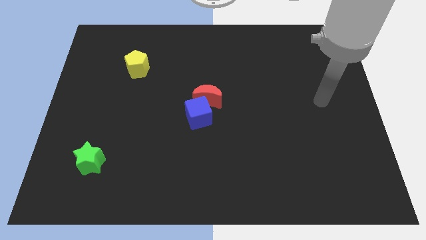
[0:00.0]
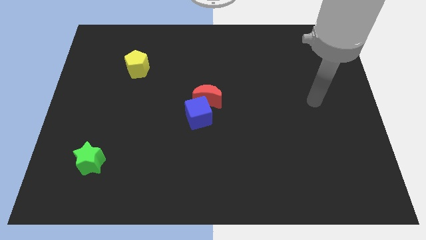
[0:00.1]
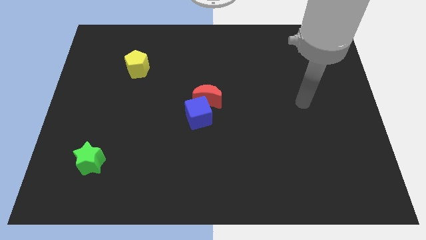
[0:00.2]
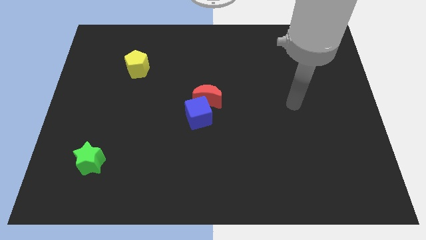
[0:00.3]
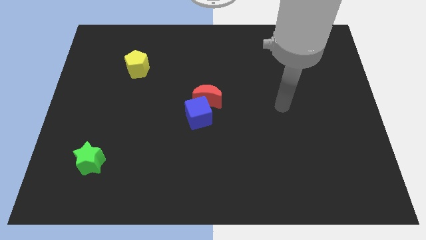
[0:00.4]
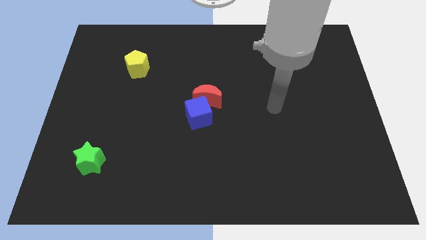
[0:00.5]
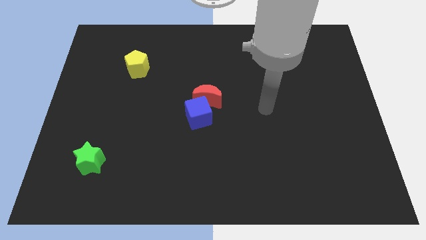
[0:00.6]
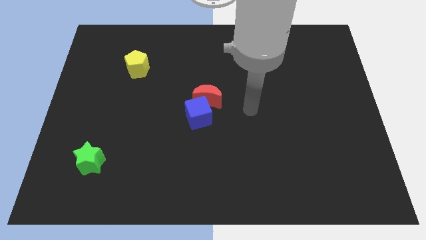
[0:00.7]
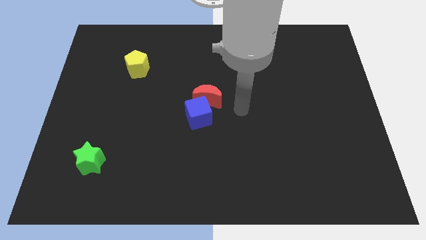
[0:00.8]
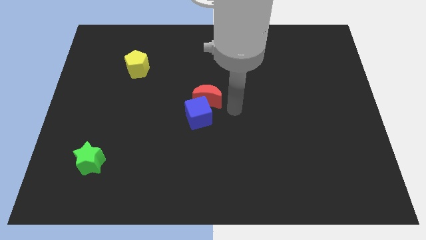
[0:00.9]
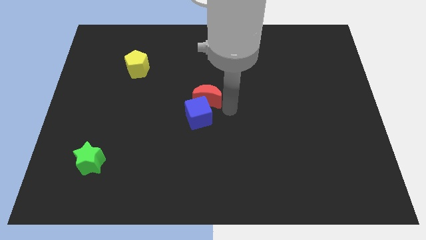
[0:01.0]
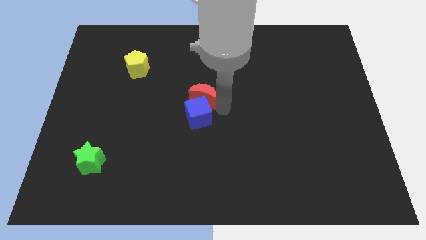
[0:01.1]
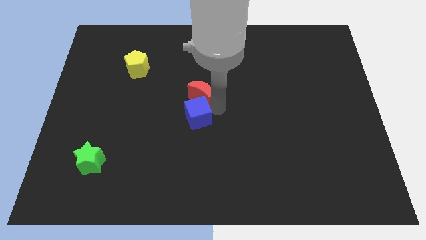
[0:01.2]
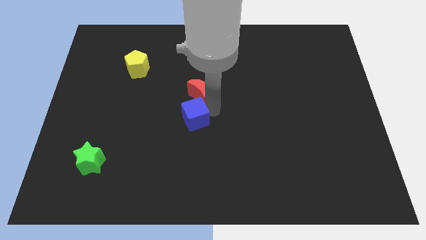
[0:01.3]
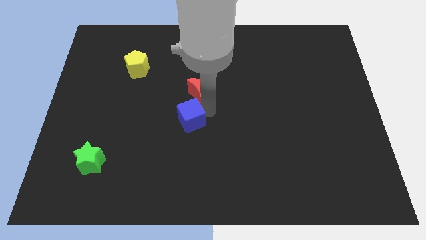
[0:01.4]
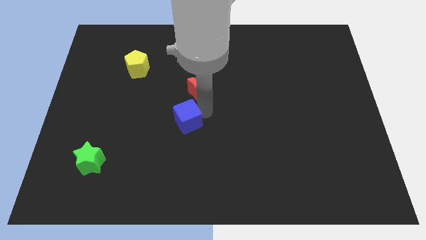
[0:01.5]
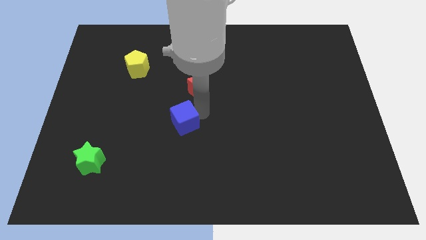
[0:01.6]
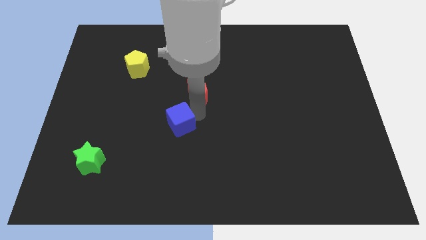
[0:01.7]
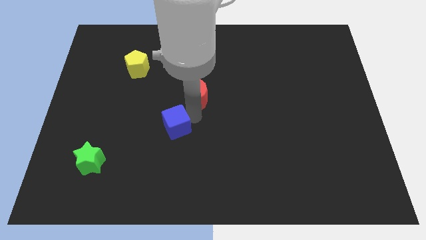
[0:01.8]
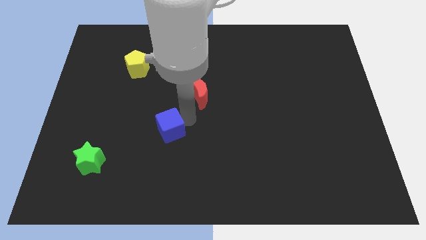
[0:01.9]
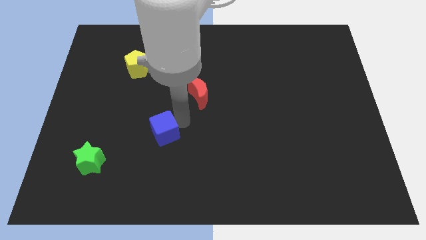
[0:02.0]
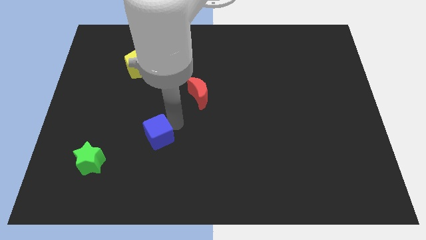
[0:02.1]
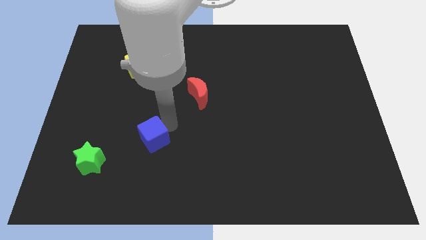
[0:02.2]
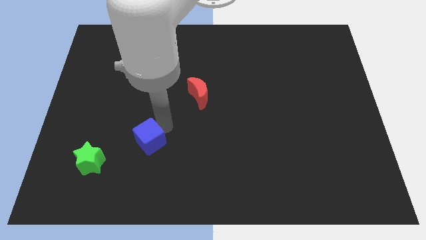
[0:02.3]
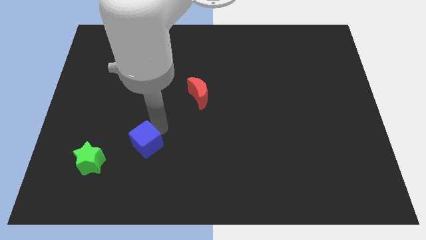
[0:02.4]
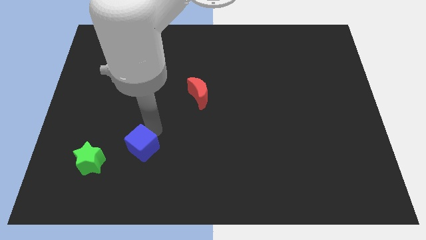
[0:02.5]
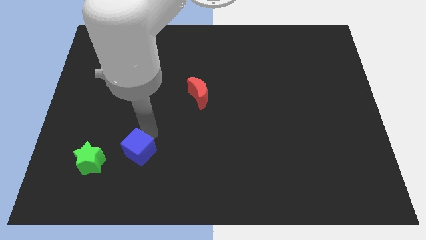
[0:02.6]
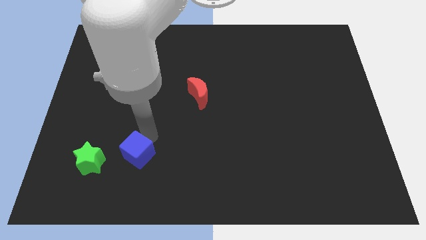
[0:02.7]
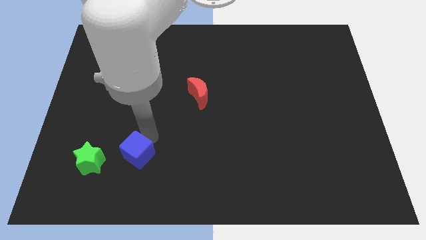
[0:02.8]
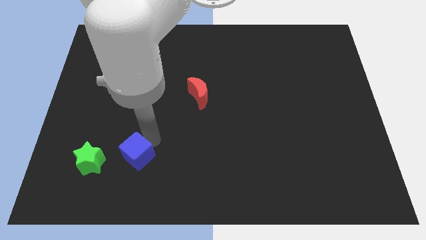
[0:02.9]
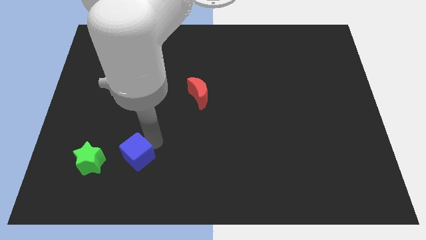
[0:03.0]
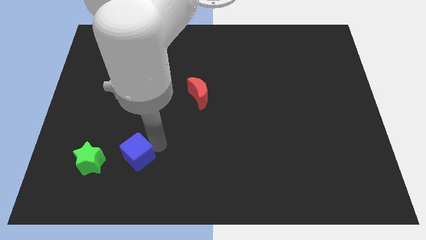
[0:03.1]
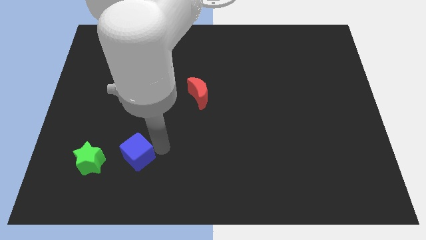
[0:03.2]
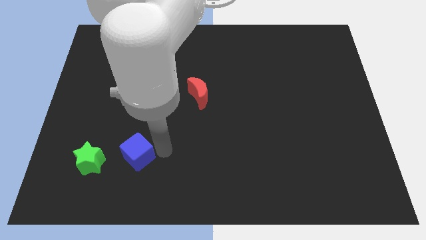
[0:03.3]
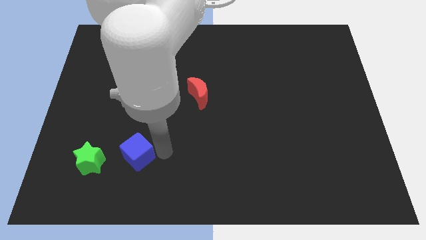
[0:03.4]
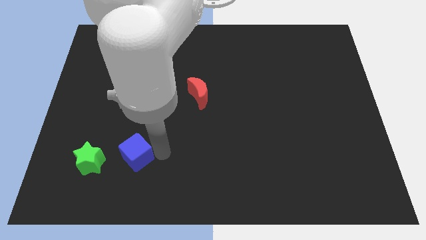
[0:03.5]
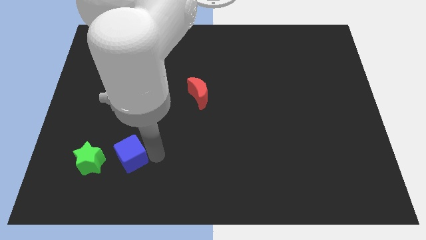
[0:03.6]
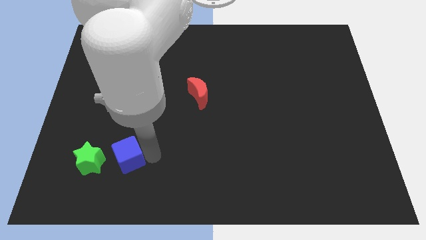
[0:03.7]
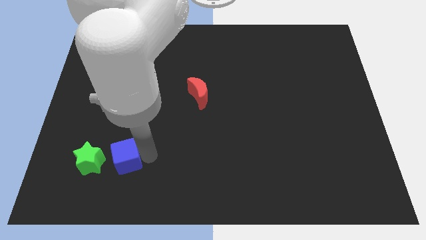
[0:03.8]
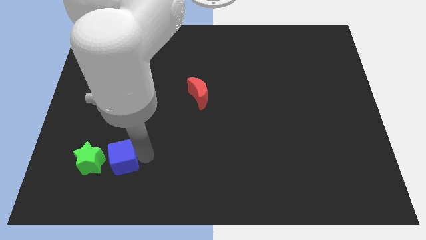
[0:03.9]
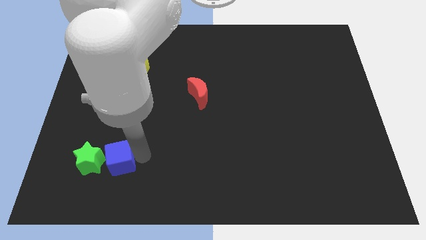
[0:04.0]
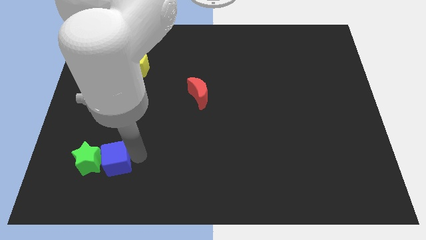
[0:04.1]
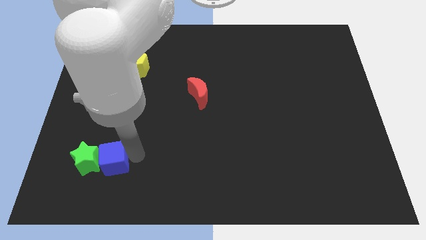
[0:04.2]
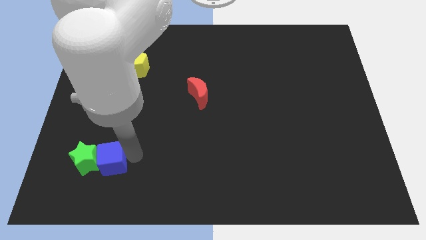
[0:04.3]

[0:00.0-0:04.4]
push the blue cube close to the green block

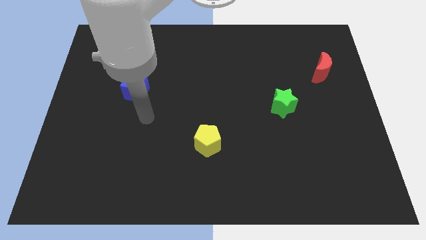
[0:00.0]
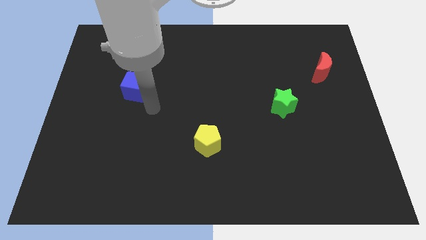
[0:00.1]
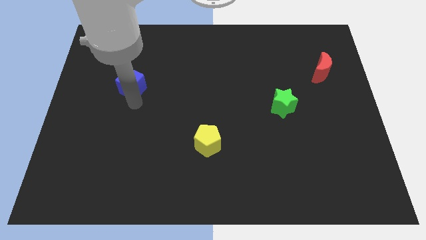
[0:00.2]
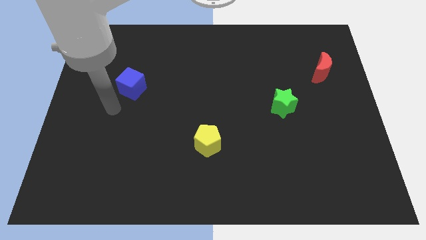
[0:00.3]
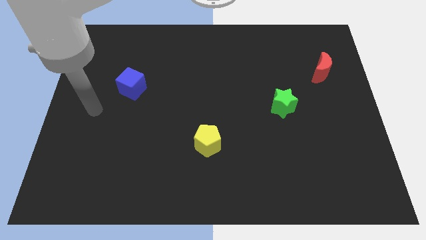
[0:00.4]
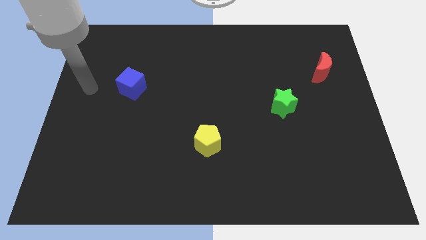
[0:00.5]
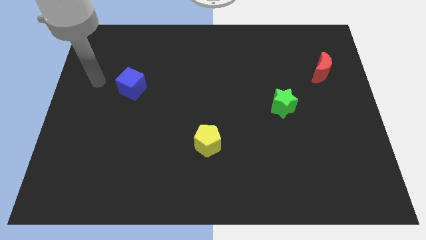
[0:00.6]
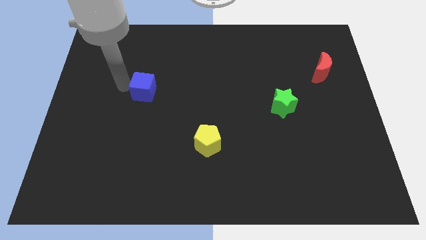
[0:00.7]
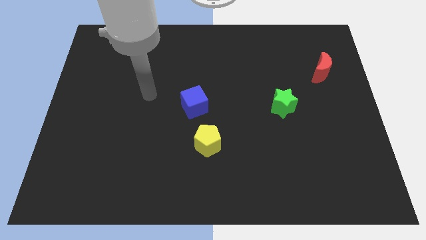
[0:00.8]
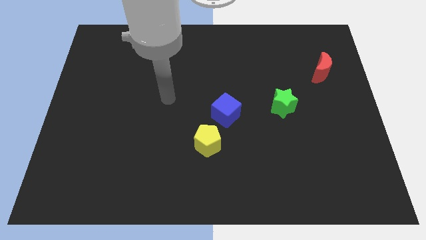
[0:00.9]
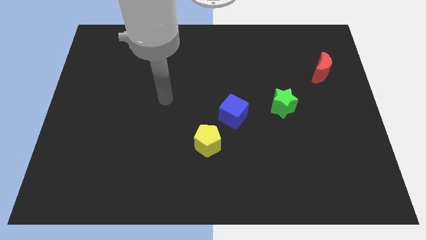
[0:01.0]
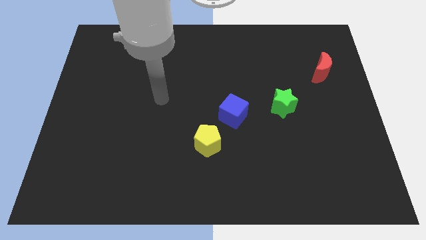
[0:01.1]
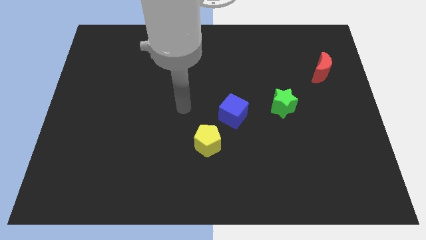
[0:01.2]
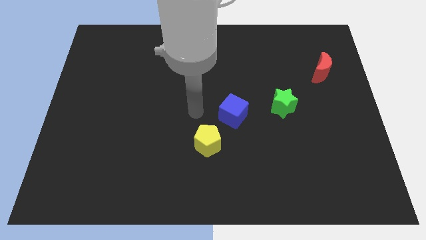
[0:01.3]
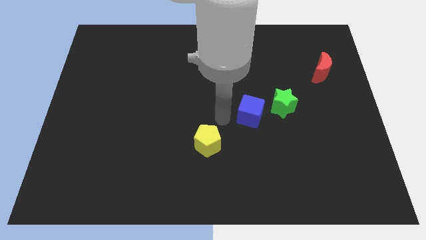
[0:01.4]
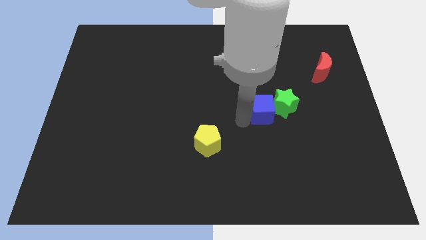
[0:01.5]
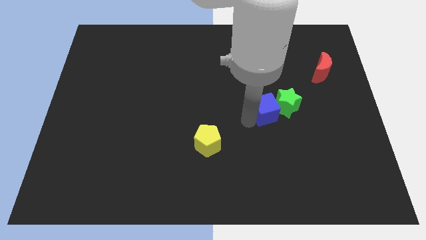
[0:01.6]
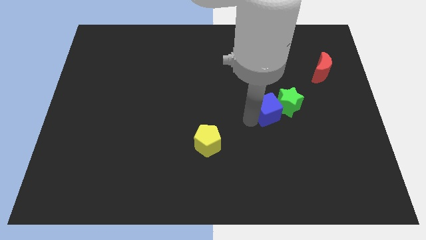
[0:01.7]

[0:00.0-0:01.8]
push the blue cube to the green star

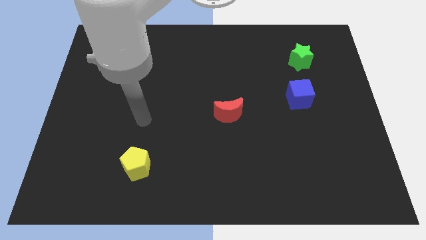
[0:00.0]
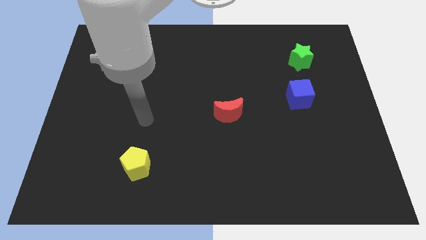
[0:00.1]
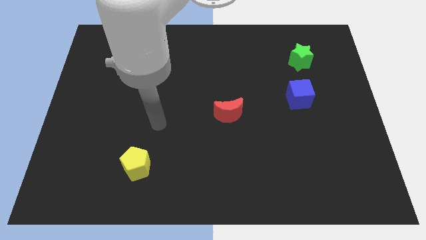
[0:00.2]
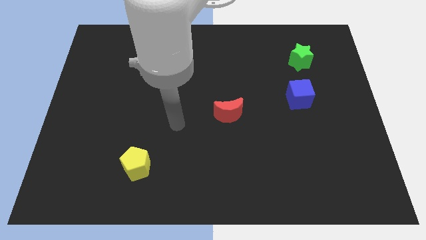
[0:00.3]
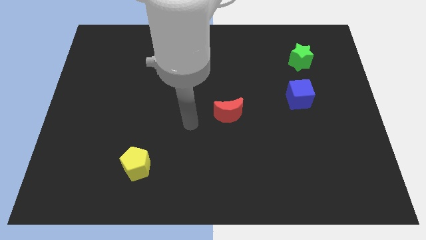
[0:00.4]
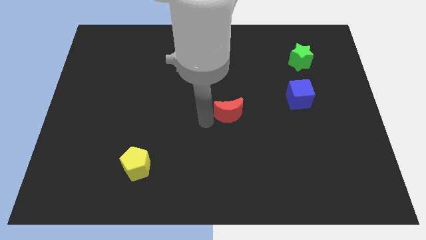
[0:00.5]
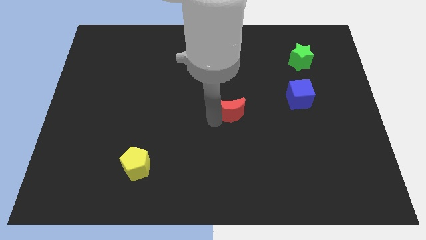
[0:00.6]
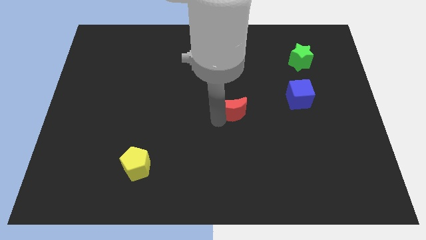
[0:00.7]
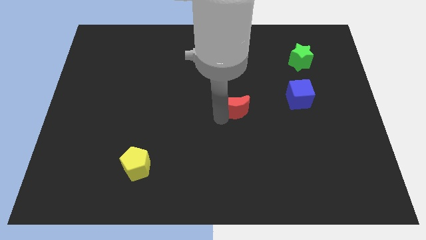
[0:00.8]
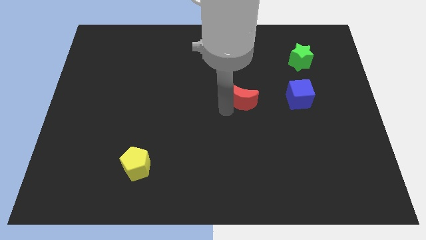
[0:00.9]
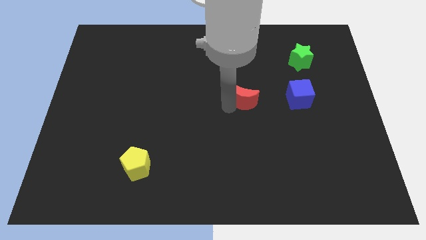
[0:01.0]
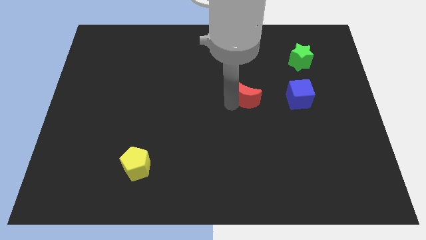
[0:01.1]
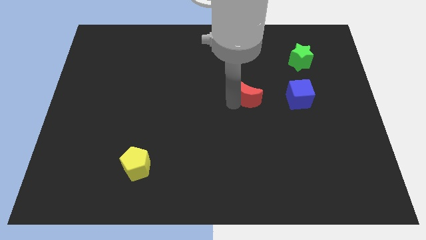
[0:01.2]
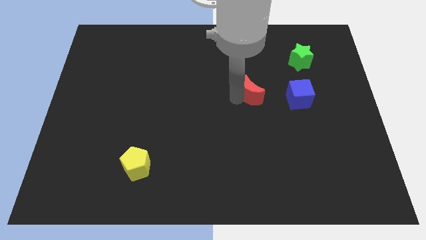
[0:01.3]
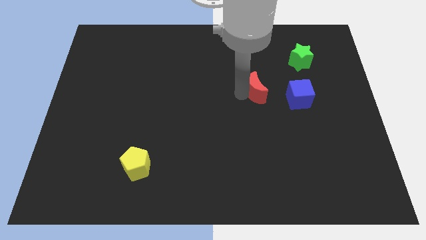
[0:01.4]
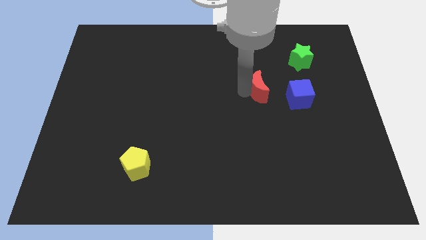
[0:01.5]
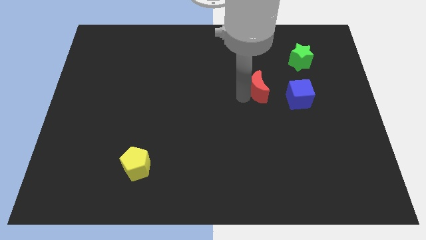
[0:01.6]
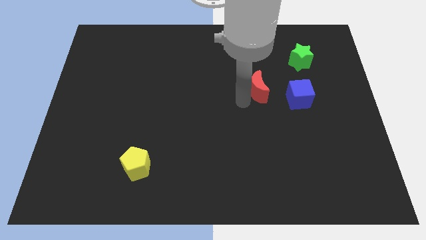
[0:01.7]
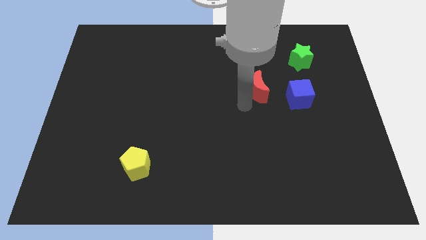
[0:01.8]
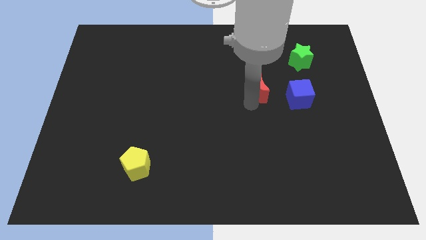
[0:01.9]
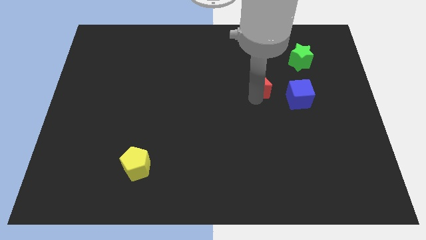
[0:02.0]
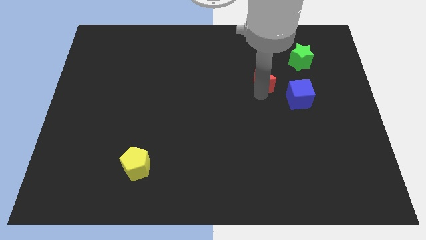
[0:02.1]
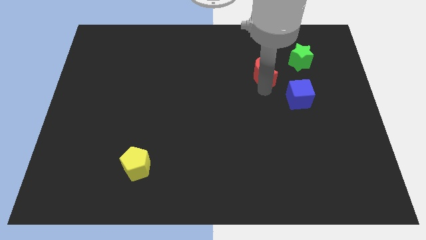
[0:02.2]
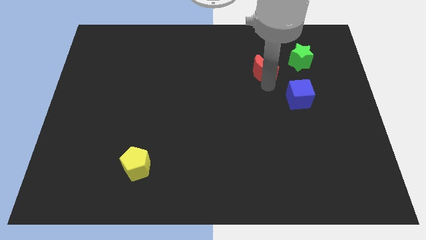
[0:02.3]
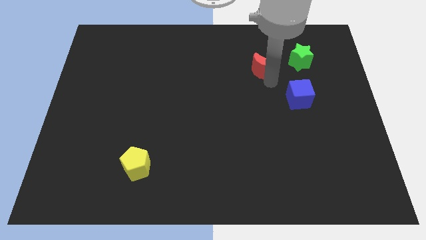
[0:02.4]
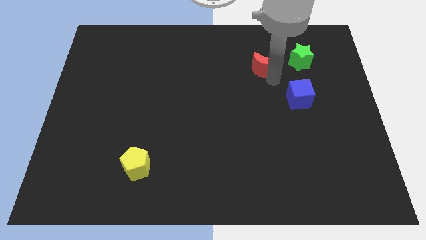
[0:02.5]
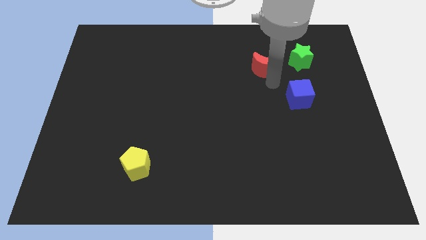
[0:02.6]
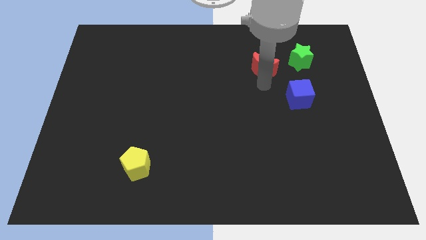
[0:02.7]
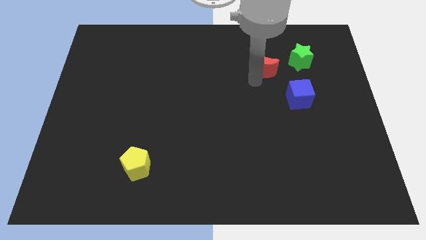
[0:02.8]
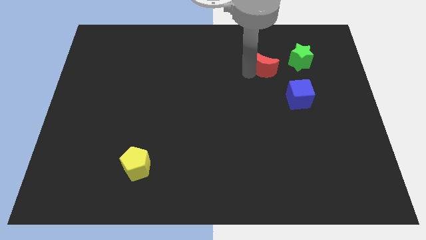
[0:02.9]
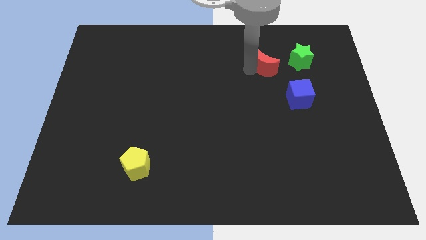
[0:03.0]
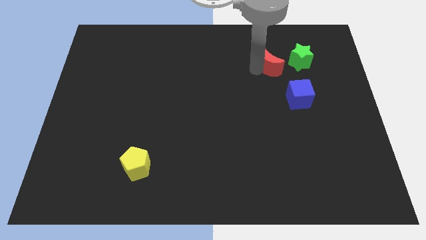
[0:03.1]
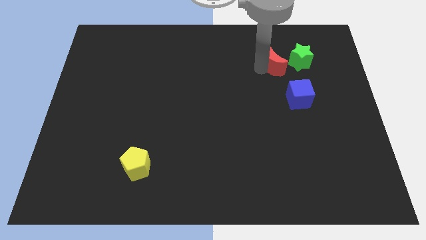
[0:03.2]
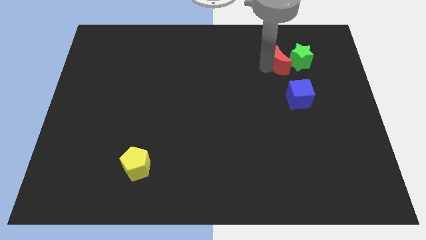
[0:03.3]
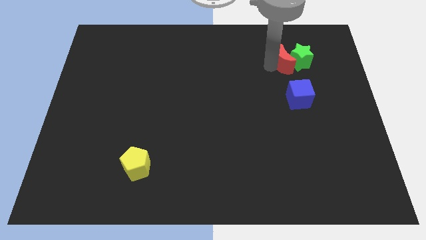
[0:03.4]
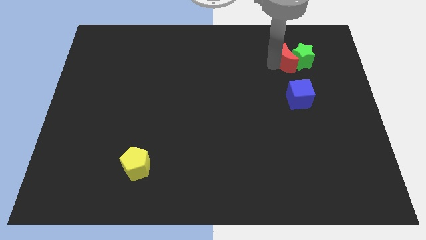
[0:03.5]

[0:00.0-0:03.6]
slide the moon close to the green block
